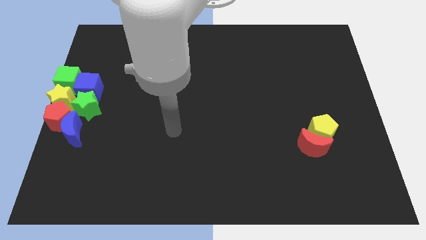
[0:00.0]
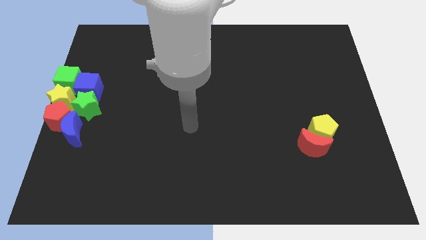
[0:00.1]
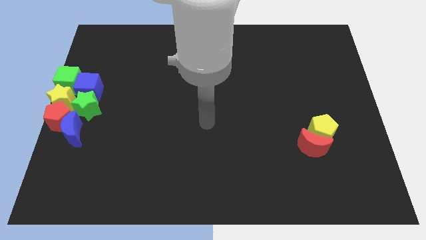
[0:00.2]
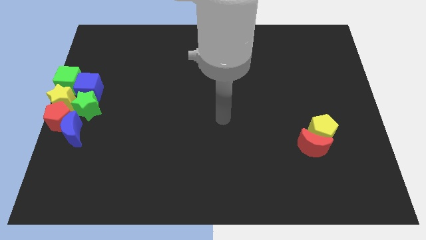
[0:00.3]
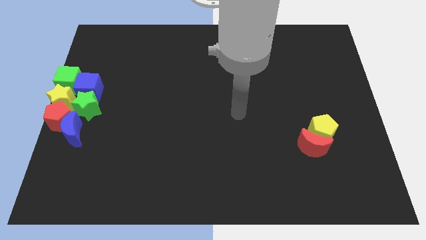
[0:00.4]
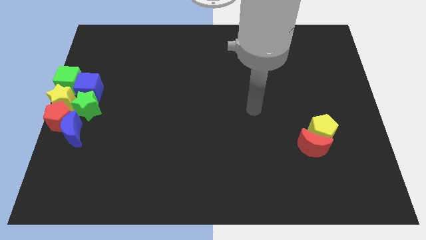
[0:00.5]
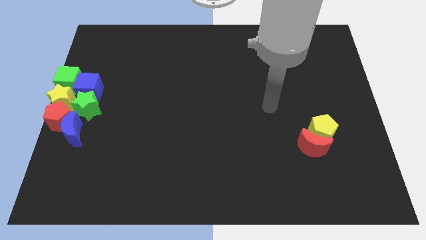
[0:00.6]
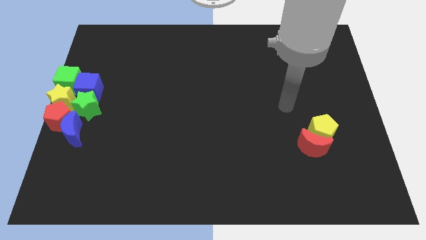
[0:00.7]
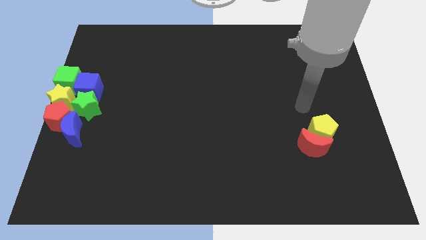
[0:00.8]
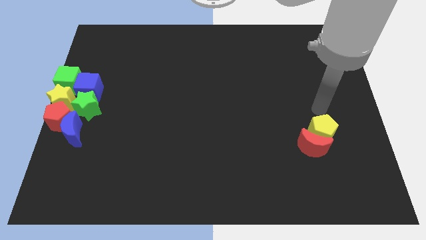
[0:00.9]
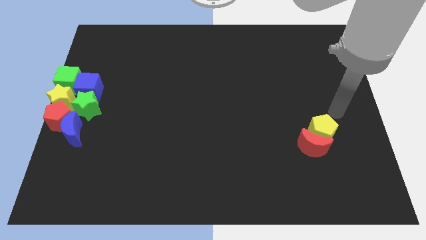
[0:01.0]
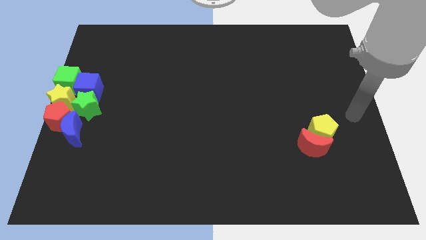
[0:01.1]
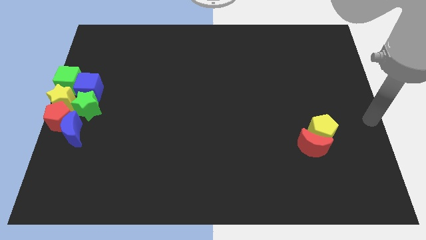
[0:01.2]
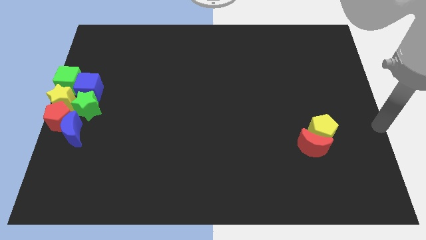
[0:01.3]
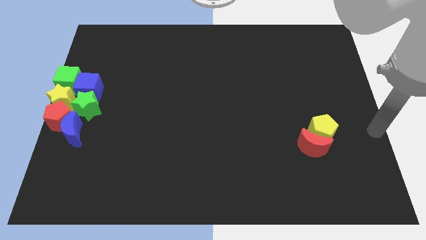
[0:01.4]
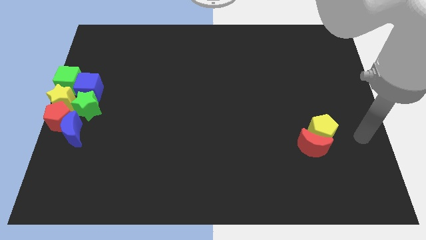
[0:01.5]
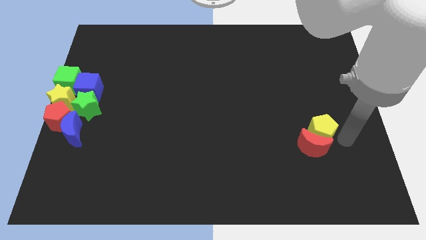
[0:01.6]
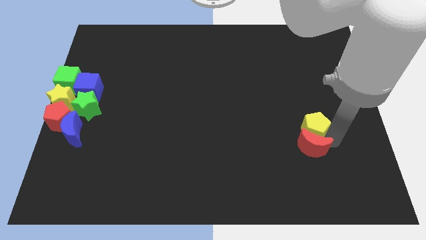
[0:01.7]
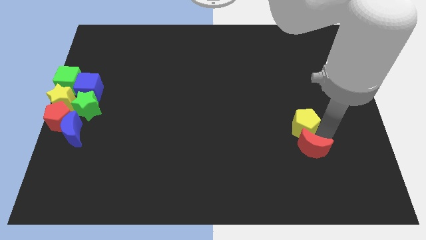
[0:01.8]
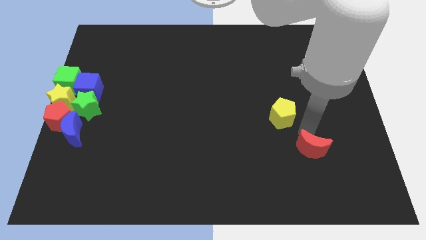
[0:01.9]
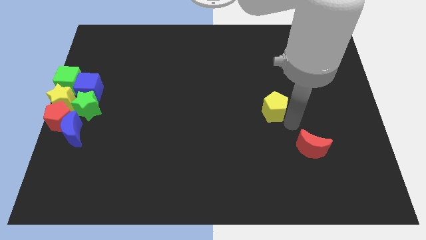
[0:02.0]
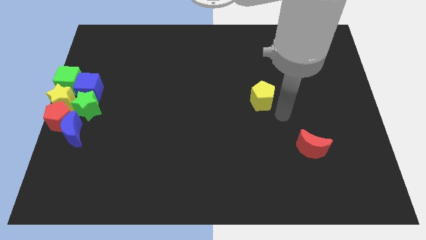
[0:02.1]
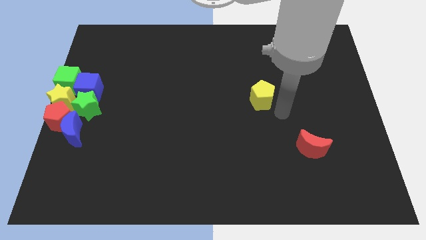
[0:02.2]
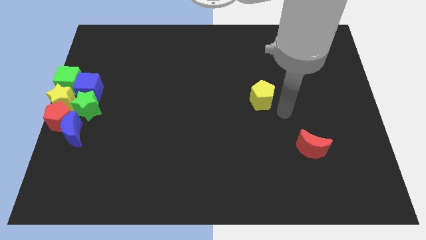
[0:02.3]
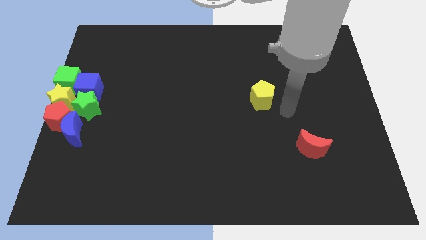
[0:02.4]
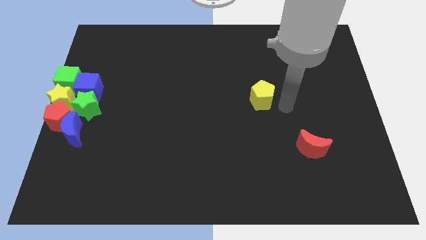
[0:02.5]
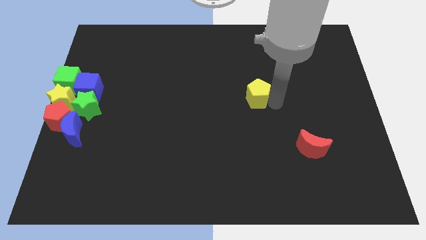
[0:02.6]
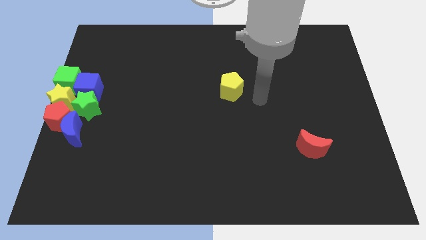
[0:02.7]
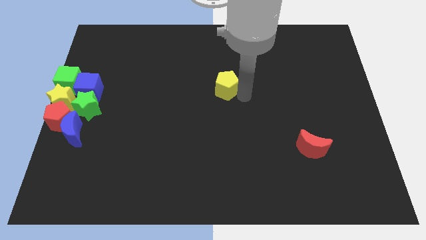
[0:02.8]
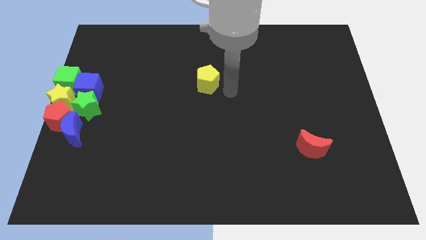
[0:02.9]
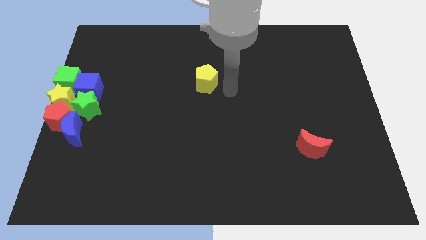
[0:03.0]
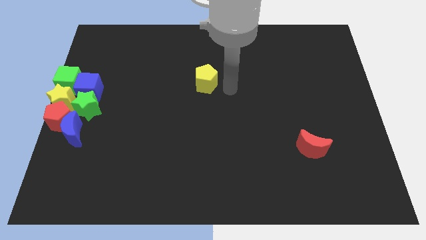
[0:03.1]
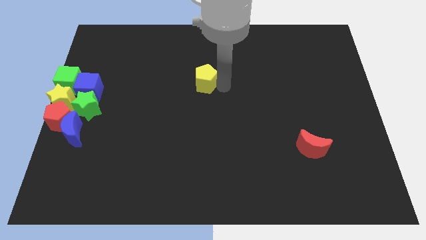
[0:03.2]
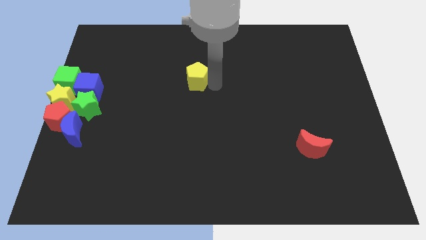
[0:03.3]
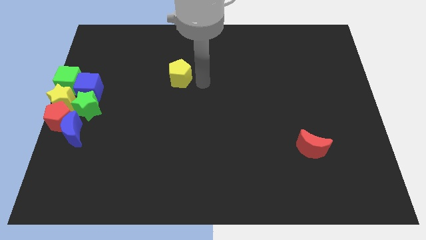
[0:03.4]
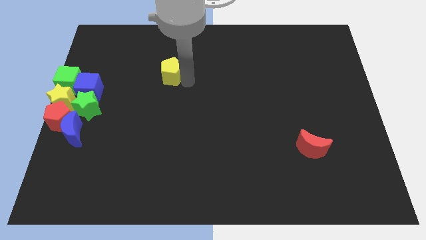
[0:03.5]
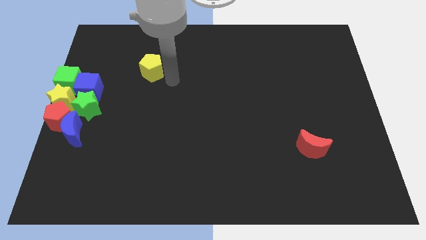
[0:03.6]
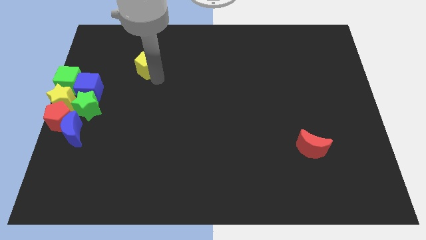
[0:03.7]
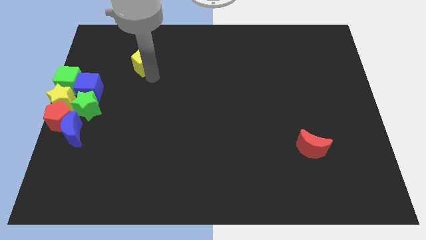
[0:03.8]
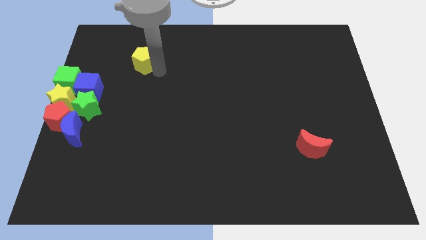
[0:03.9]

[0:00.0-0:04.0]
move the yellow pentagon away from the red crescent

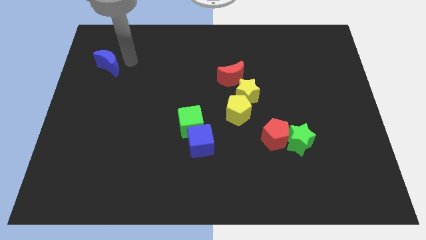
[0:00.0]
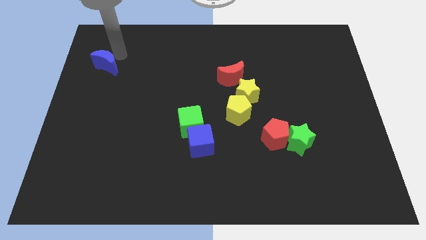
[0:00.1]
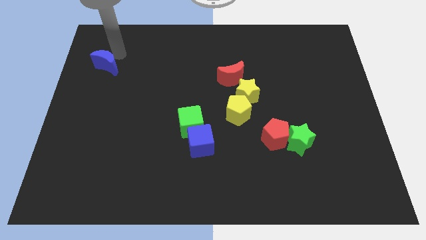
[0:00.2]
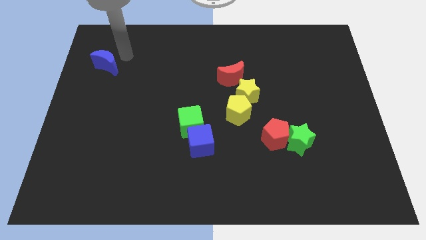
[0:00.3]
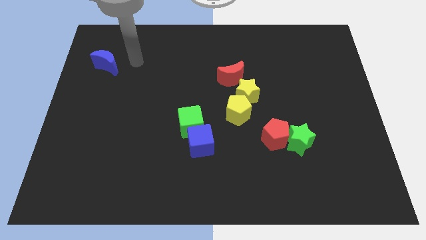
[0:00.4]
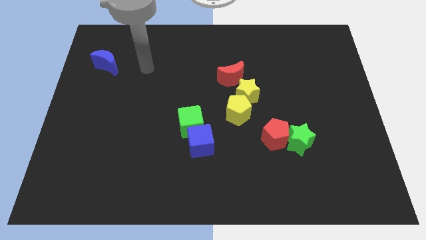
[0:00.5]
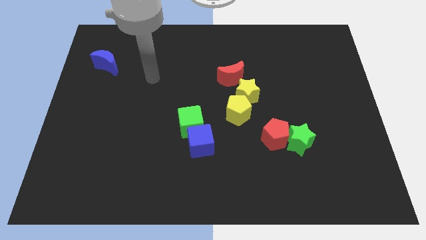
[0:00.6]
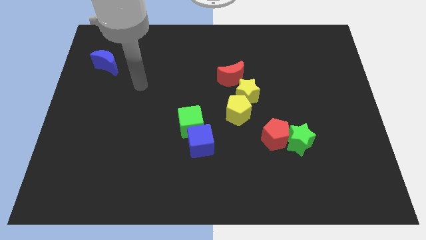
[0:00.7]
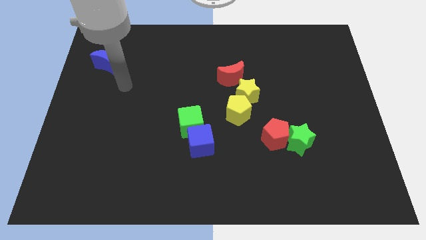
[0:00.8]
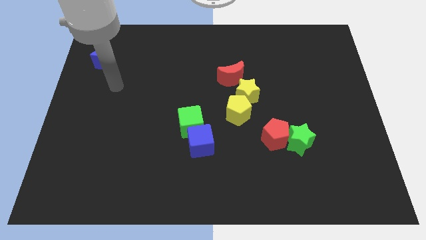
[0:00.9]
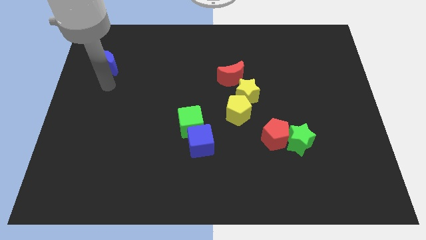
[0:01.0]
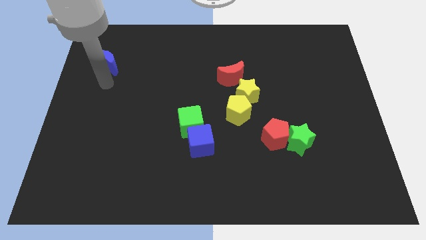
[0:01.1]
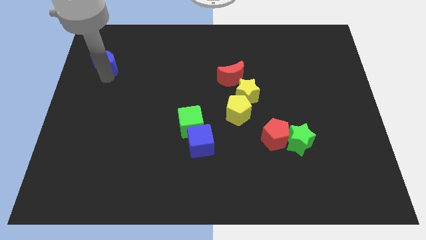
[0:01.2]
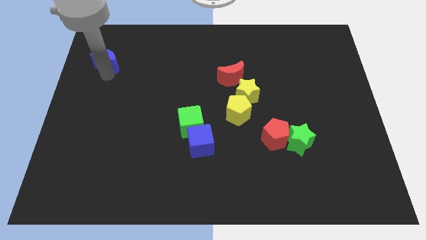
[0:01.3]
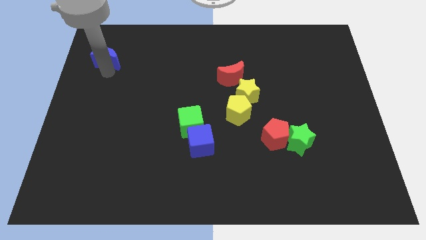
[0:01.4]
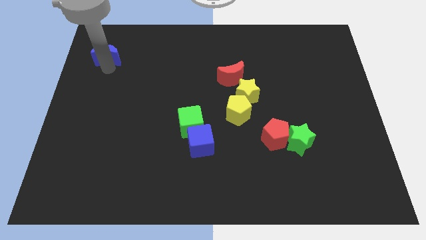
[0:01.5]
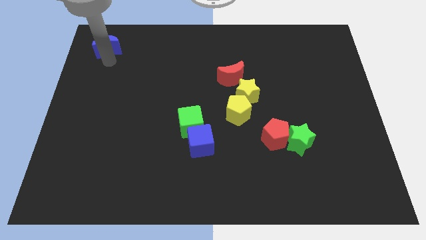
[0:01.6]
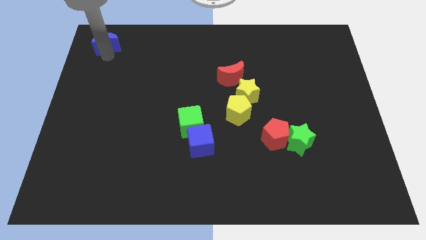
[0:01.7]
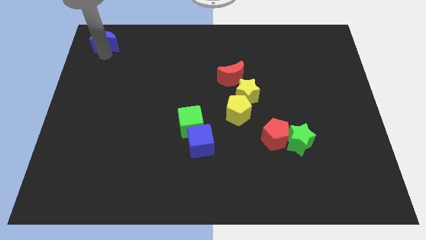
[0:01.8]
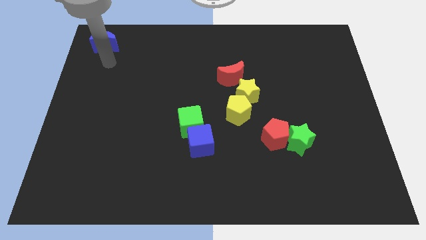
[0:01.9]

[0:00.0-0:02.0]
push the blue crescent towards the top left corner of the board

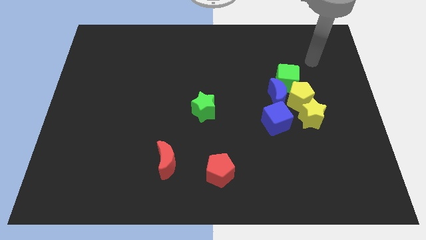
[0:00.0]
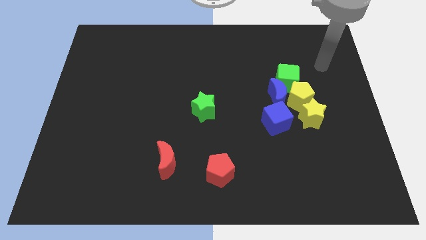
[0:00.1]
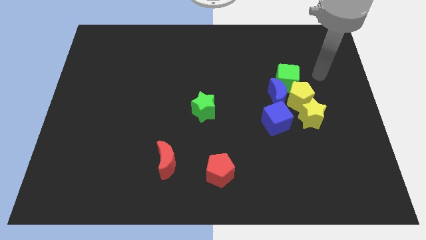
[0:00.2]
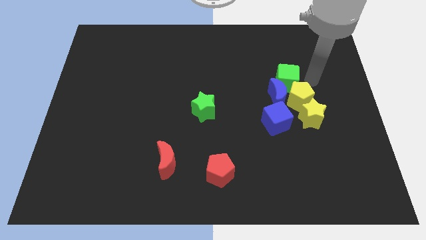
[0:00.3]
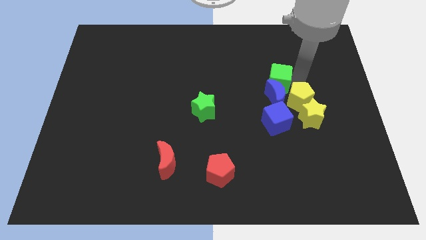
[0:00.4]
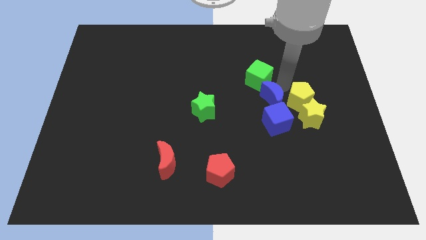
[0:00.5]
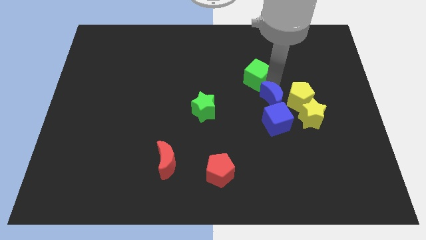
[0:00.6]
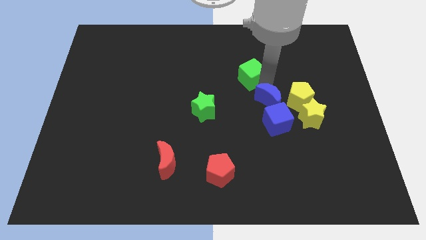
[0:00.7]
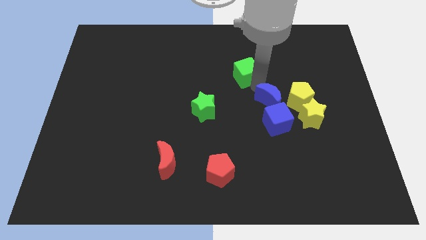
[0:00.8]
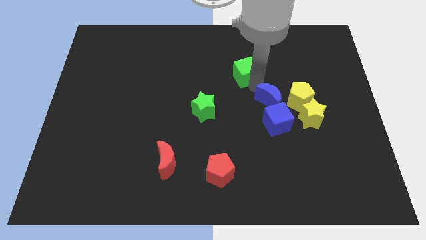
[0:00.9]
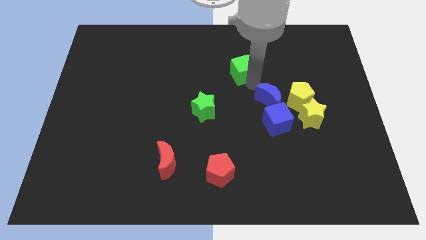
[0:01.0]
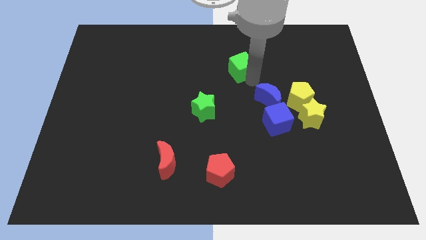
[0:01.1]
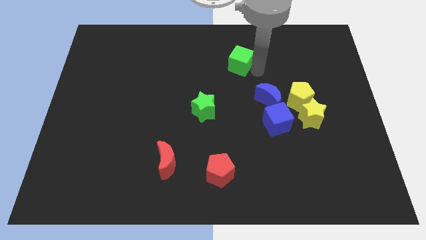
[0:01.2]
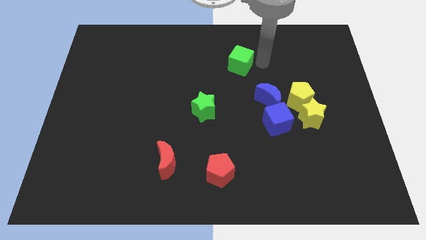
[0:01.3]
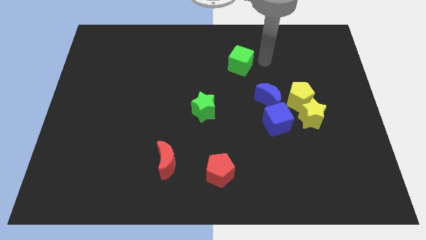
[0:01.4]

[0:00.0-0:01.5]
place the green cube to the top center of the board

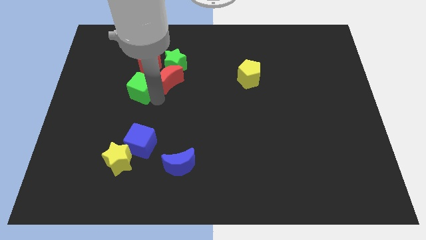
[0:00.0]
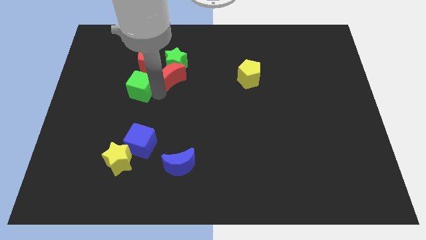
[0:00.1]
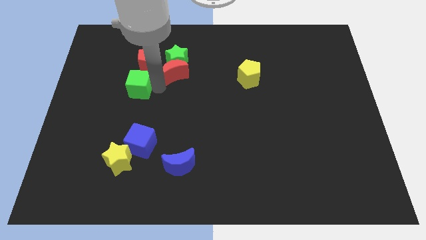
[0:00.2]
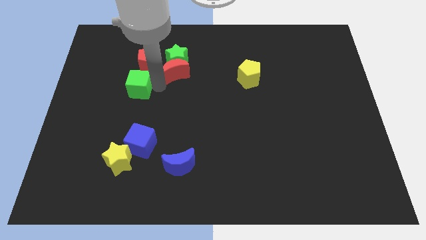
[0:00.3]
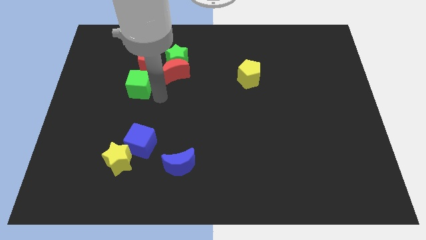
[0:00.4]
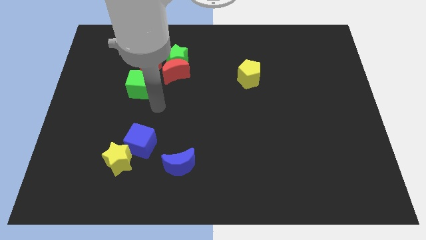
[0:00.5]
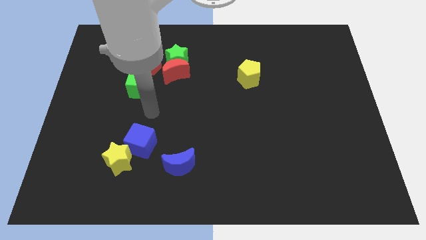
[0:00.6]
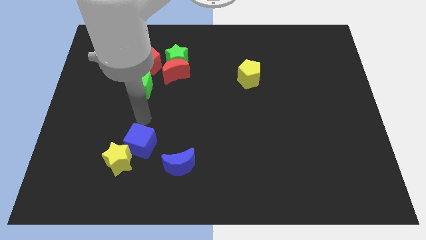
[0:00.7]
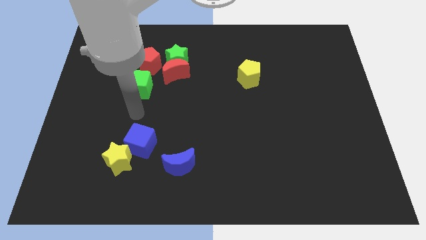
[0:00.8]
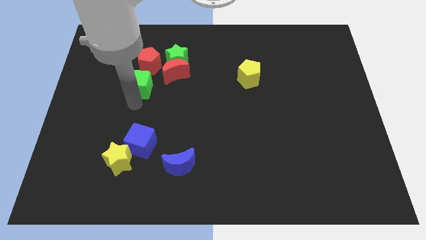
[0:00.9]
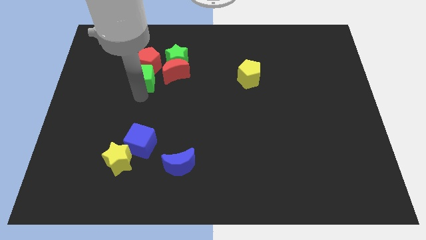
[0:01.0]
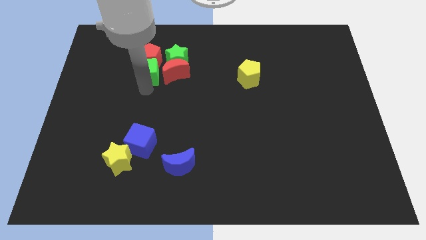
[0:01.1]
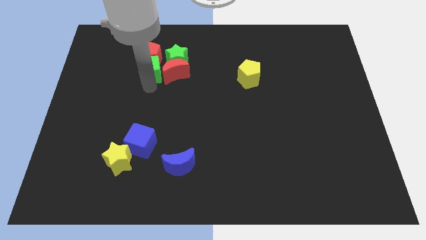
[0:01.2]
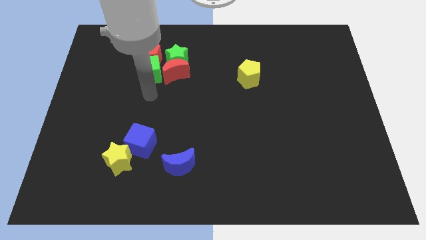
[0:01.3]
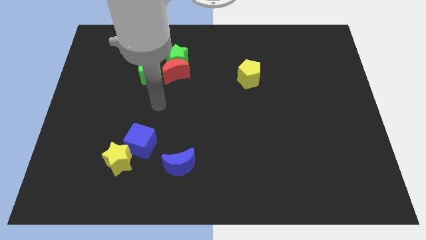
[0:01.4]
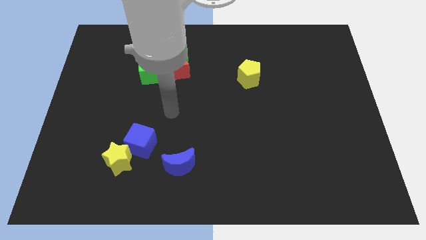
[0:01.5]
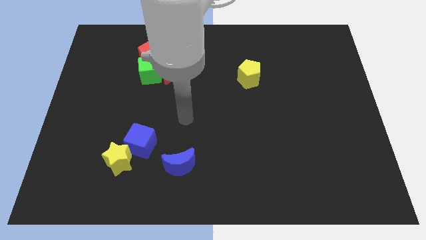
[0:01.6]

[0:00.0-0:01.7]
push the green cube into the red pentagon
